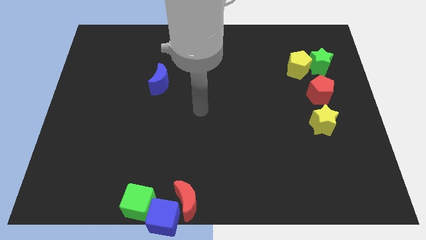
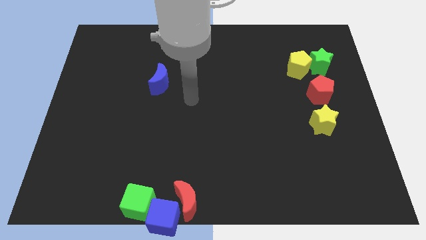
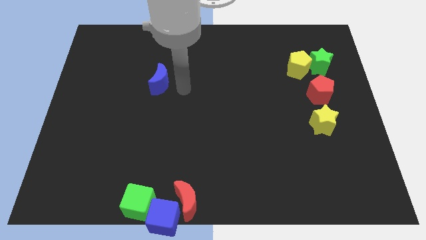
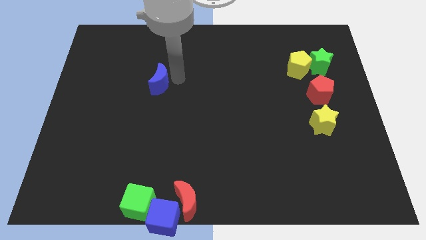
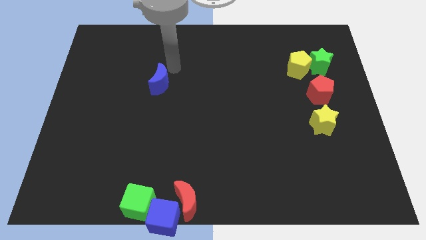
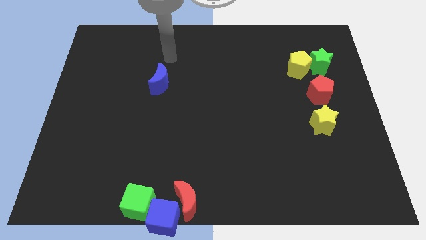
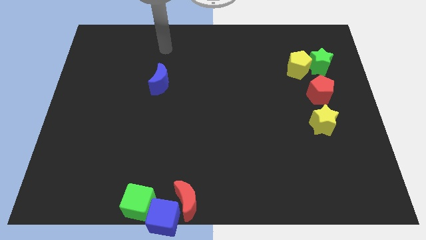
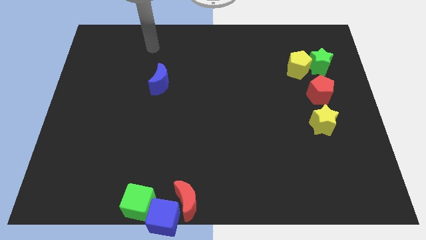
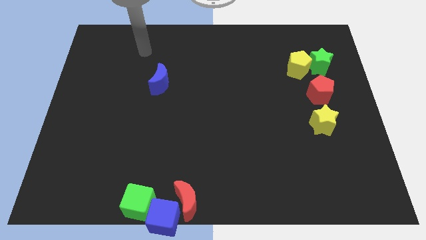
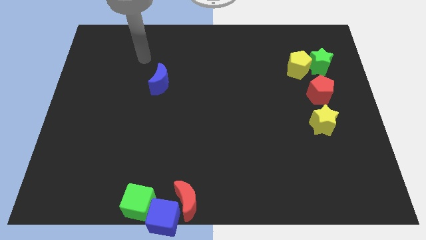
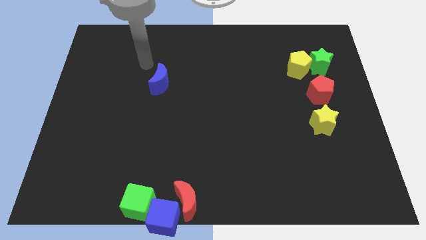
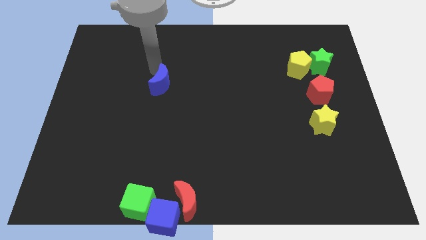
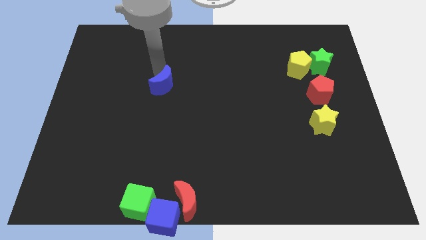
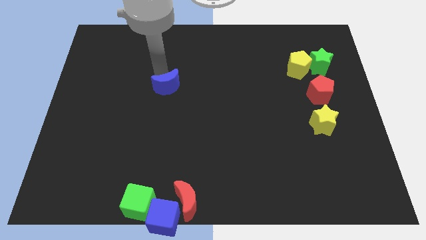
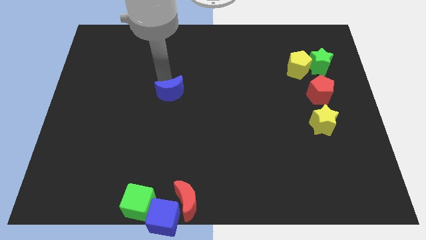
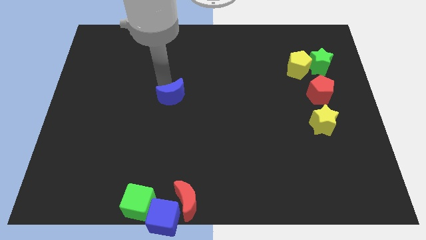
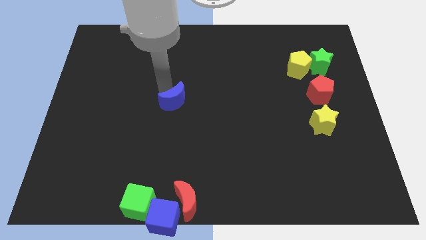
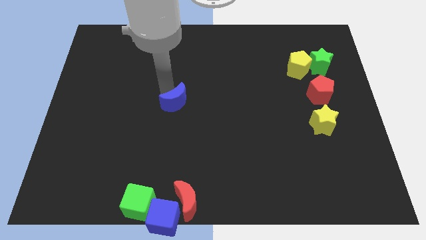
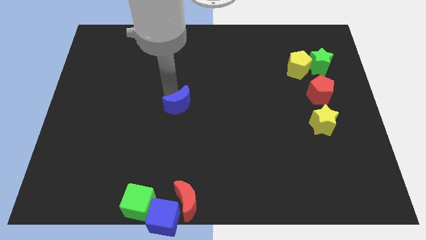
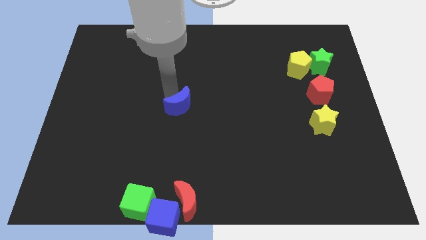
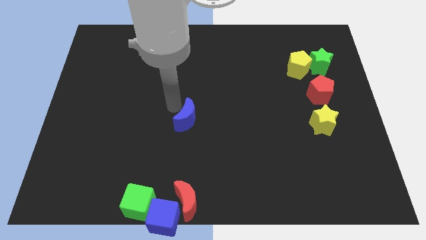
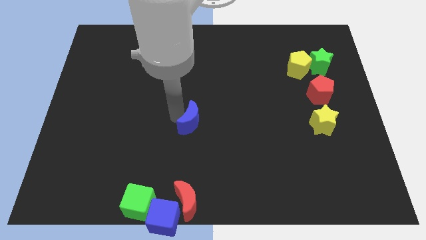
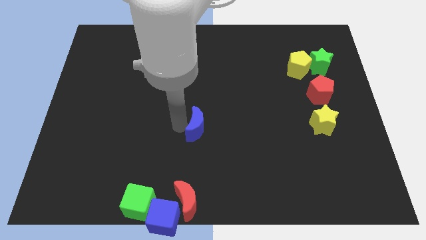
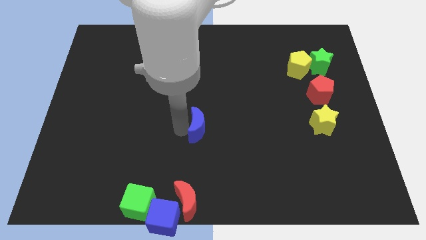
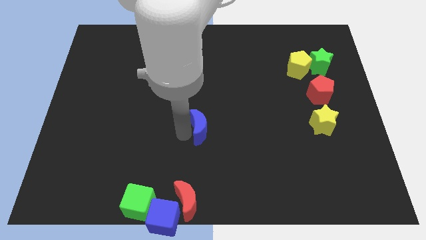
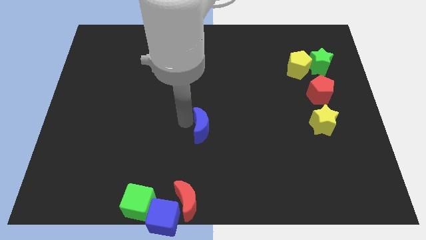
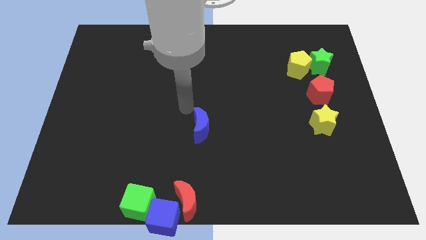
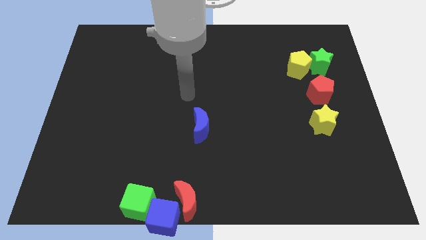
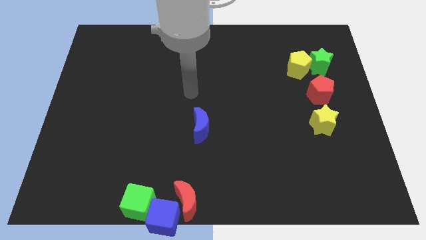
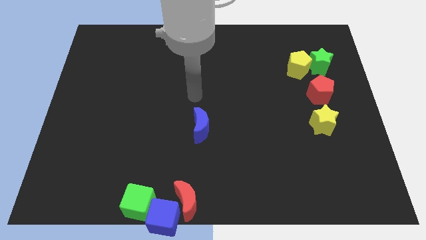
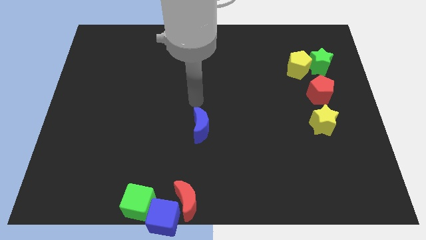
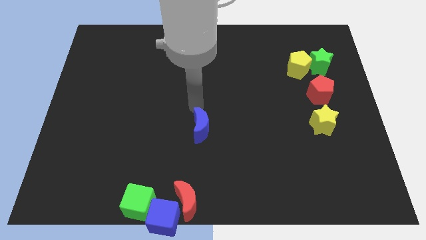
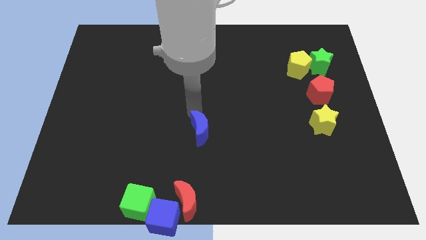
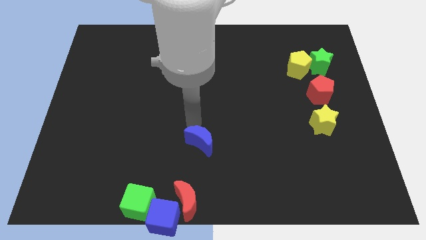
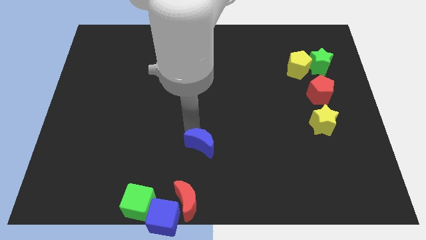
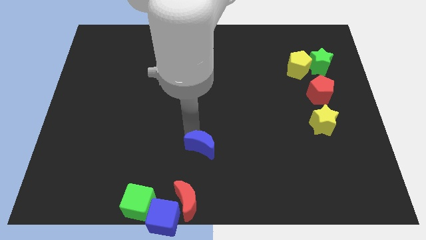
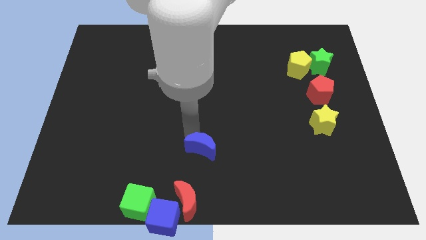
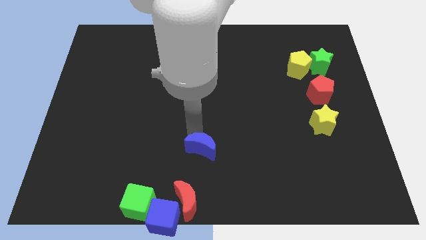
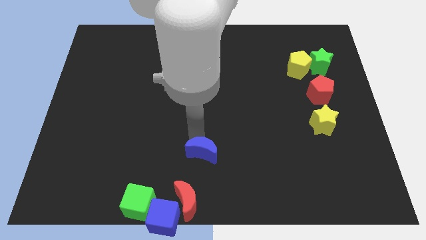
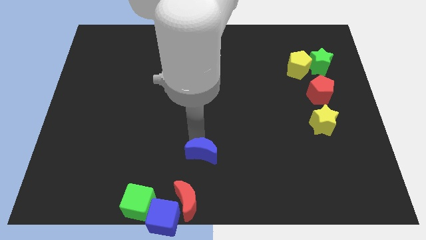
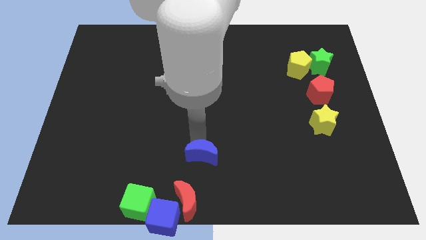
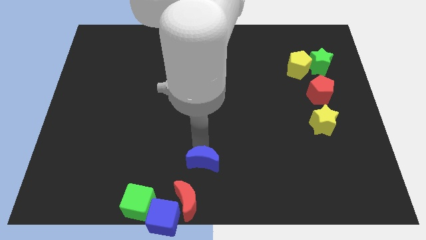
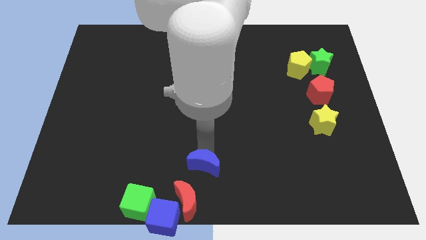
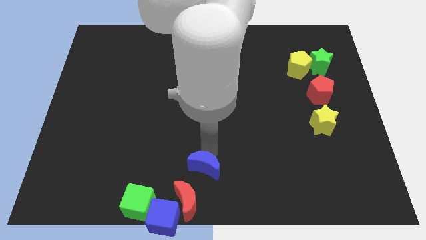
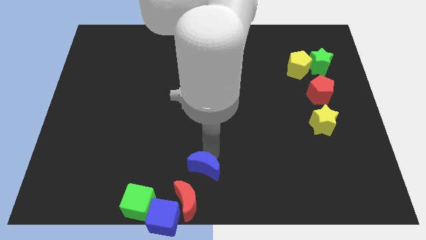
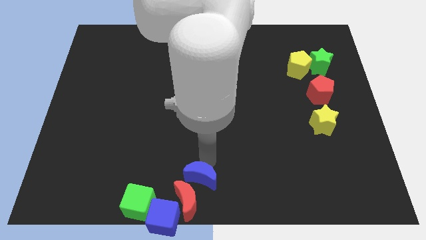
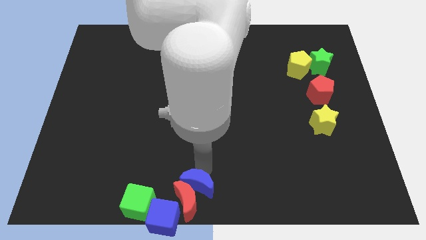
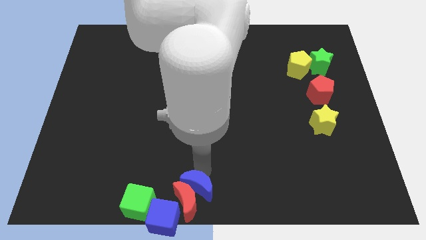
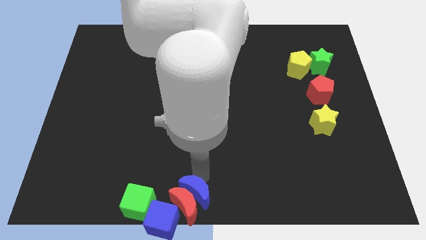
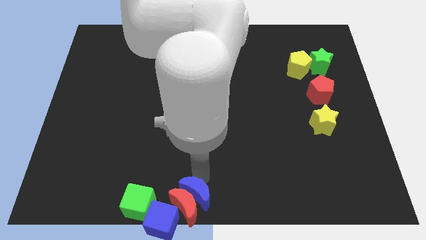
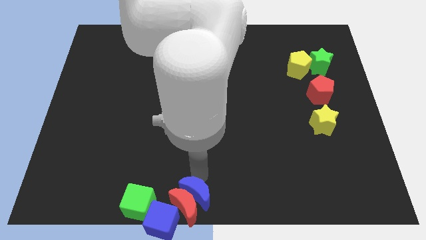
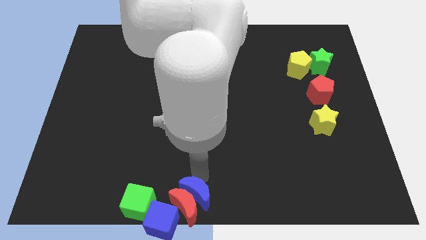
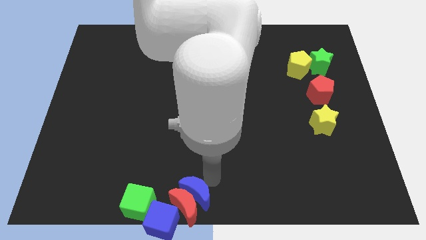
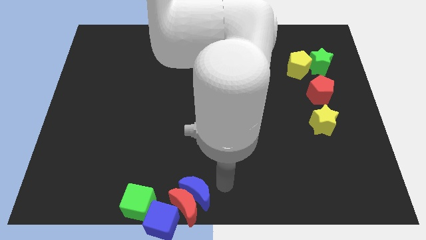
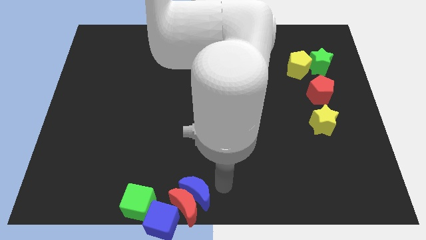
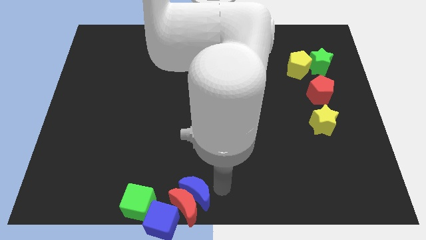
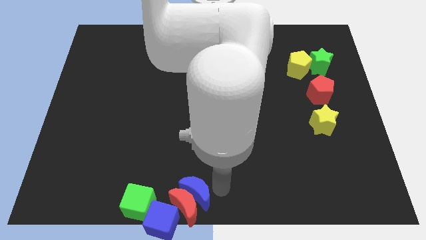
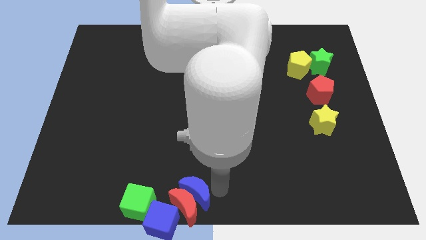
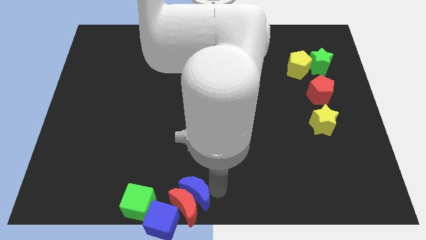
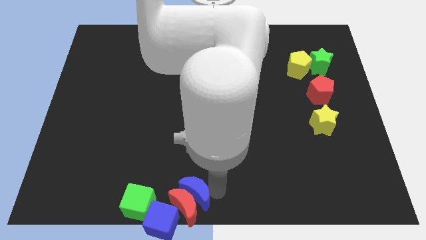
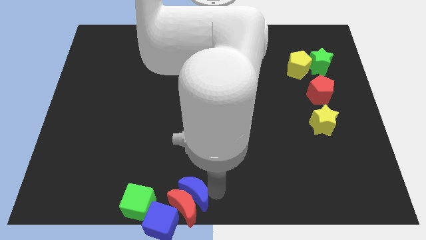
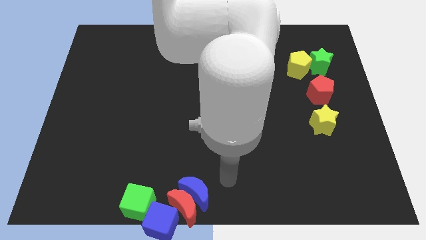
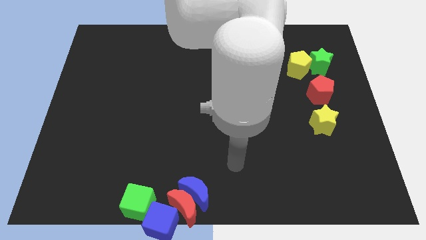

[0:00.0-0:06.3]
place the blue crescent at the top right side of the red crescent

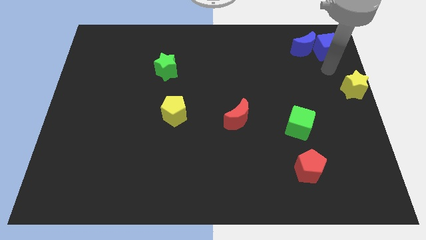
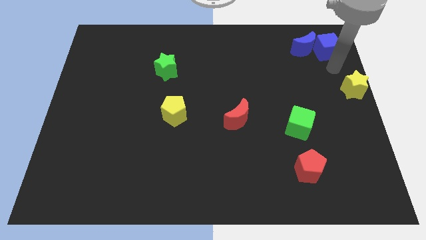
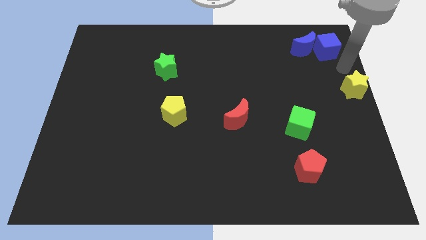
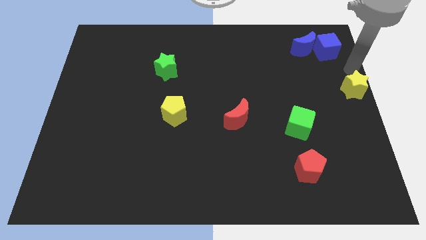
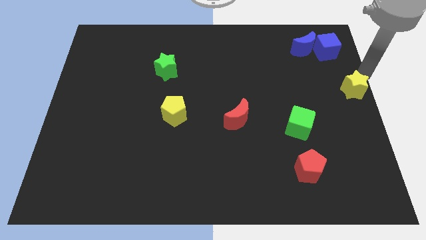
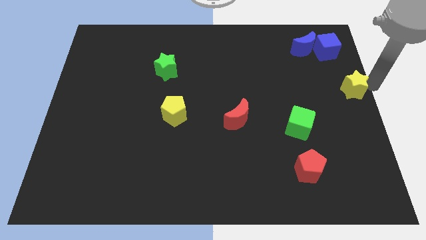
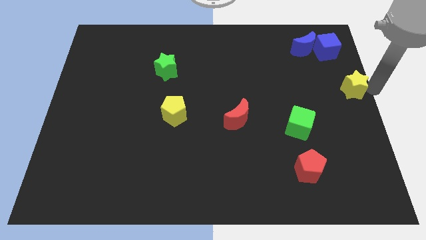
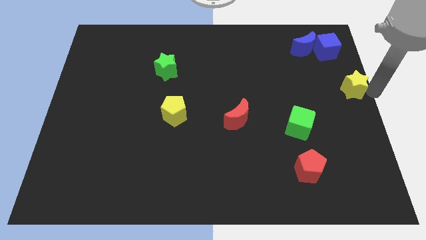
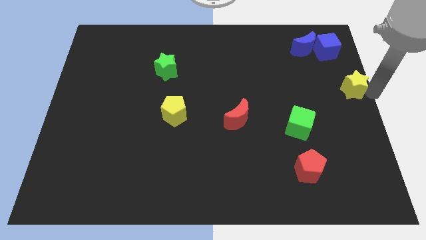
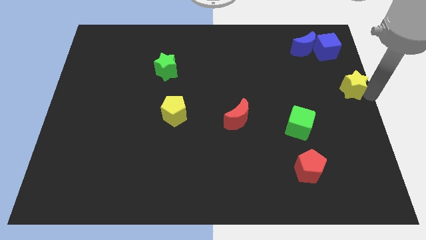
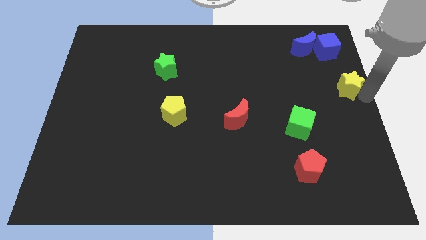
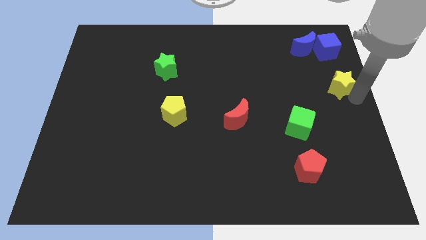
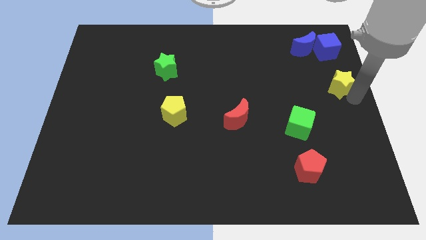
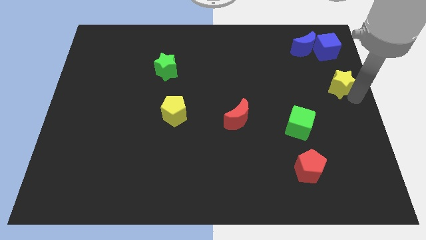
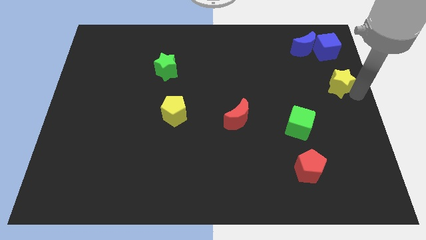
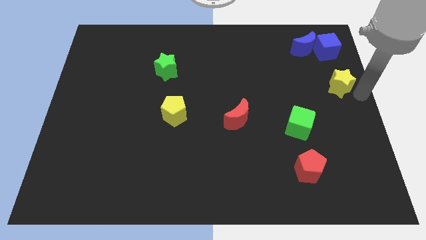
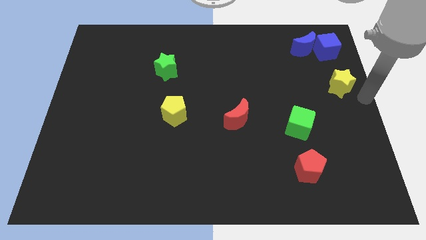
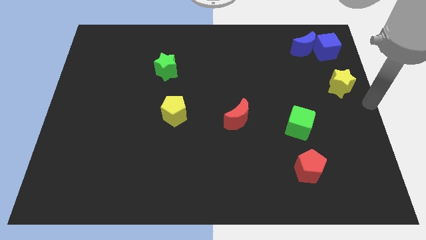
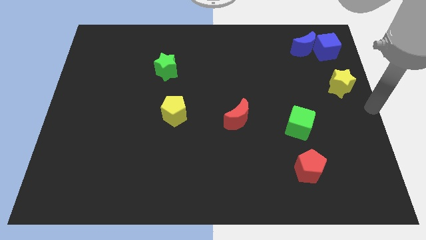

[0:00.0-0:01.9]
place yellow star to the bottom of blue cube

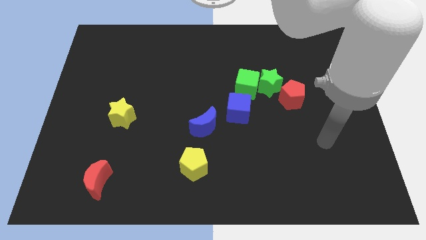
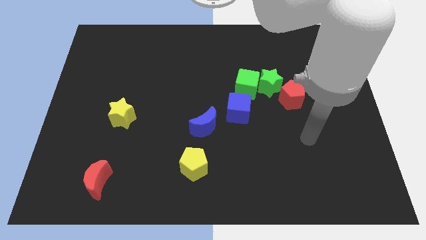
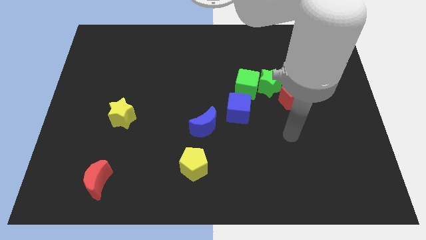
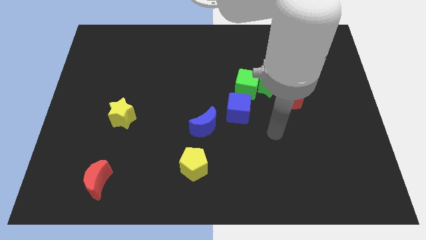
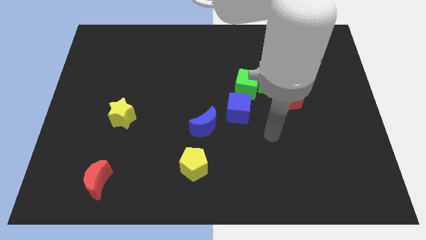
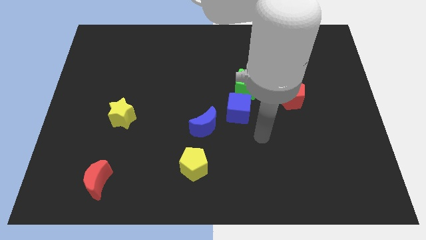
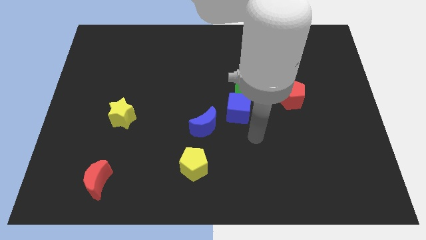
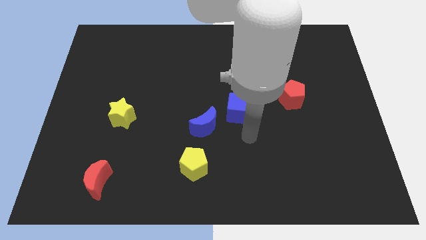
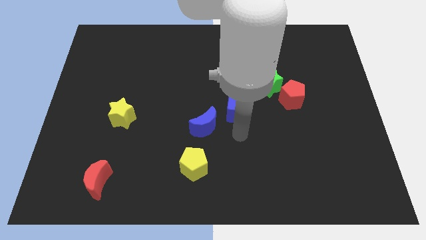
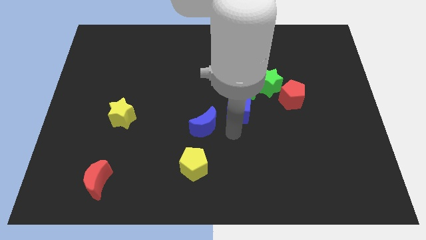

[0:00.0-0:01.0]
place your arm at the bottom of the blue cube
